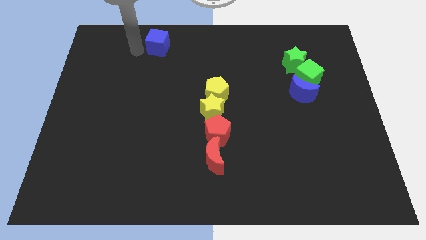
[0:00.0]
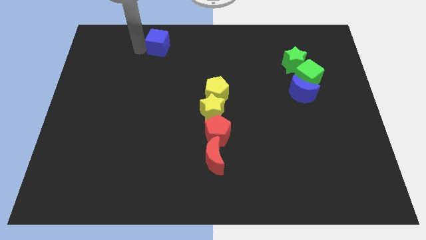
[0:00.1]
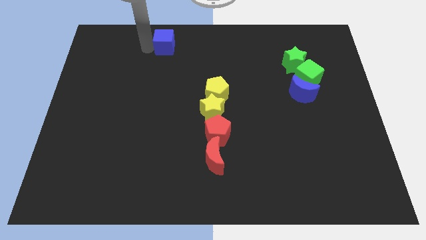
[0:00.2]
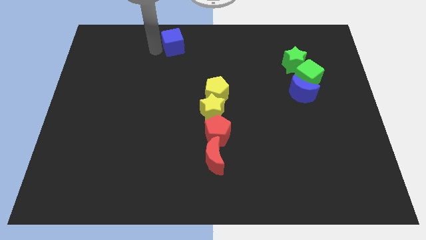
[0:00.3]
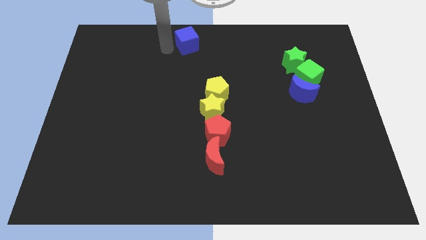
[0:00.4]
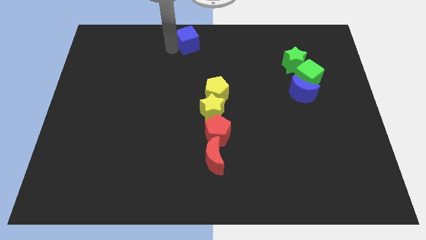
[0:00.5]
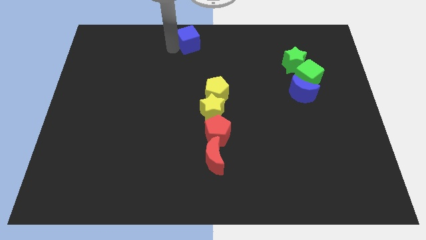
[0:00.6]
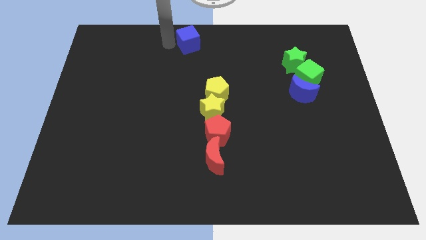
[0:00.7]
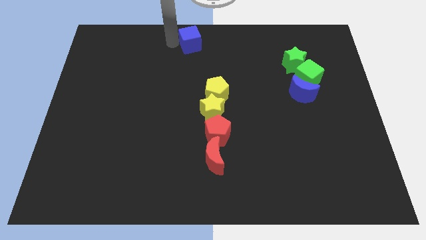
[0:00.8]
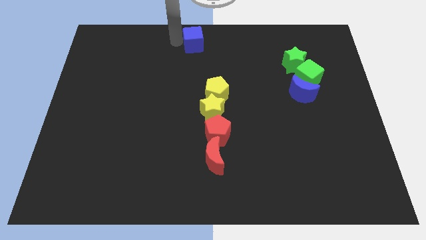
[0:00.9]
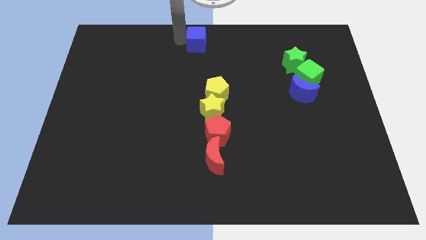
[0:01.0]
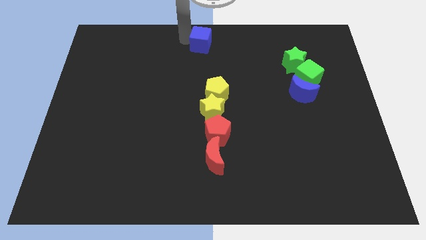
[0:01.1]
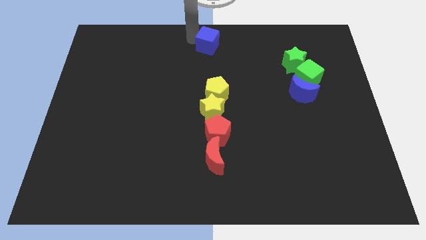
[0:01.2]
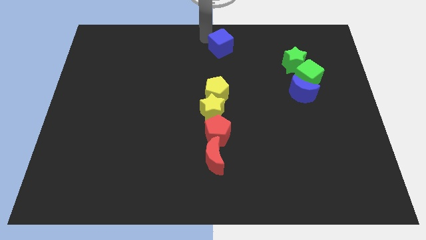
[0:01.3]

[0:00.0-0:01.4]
move the blue cube to the top center of the board

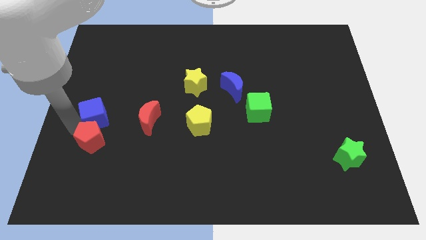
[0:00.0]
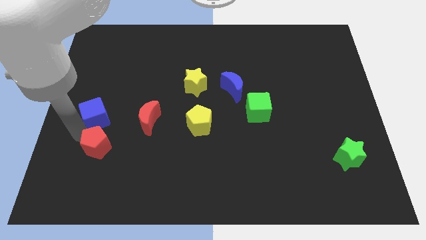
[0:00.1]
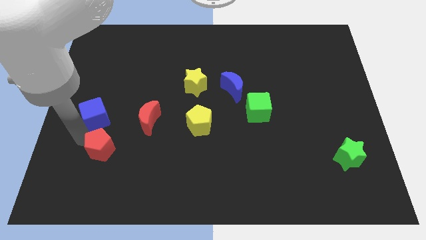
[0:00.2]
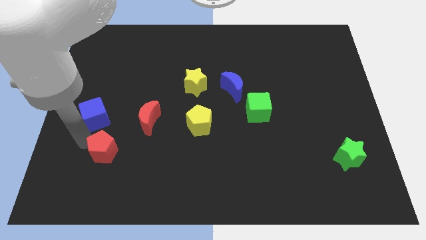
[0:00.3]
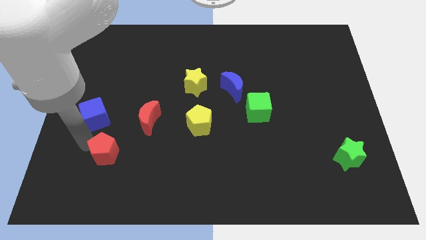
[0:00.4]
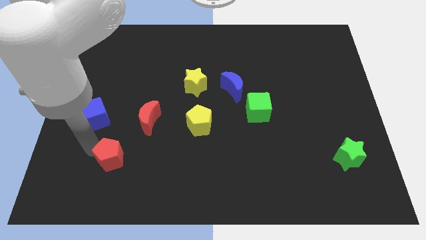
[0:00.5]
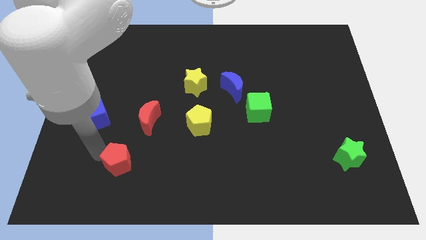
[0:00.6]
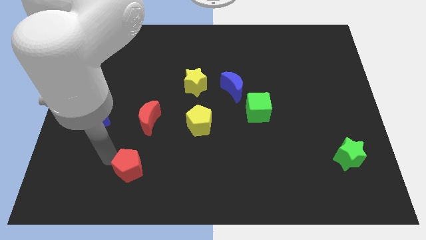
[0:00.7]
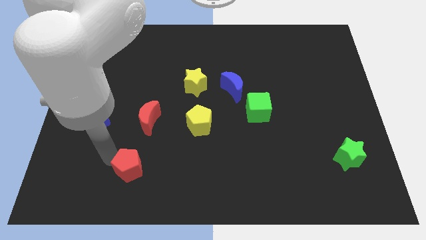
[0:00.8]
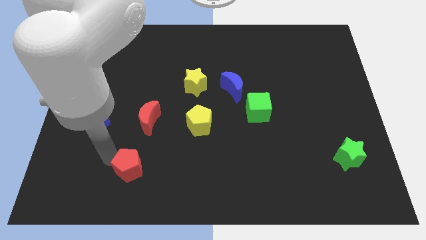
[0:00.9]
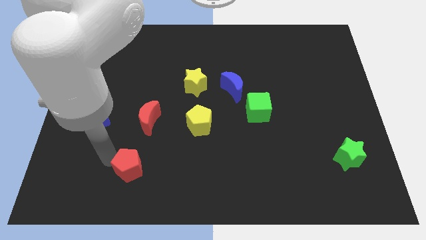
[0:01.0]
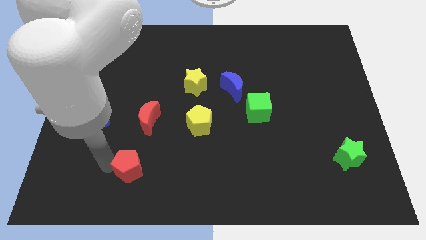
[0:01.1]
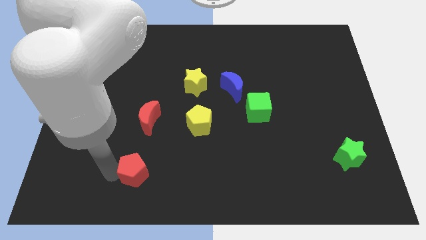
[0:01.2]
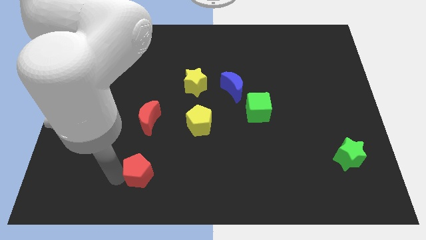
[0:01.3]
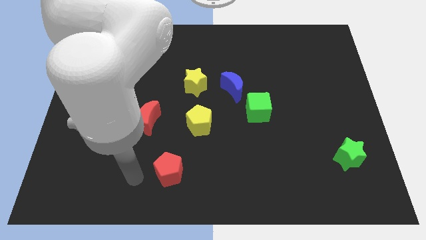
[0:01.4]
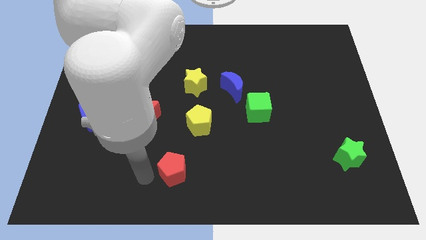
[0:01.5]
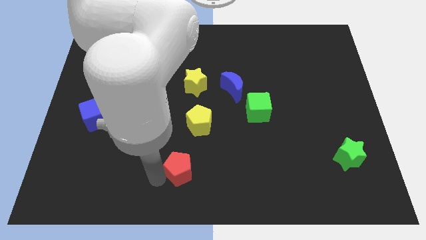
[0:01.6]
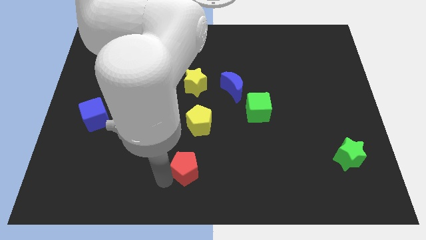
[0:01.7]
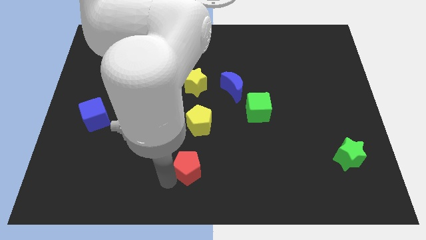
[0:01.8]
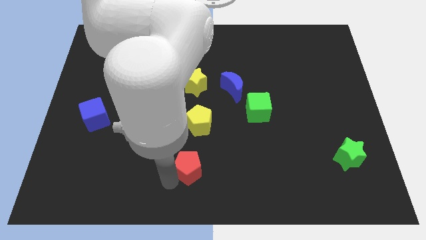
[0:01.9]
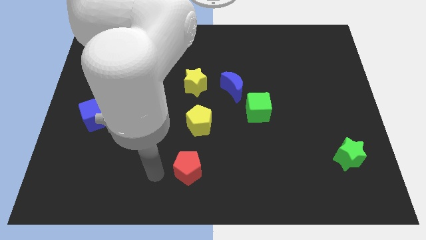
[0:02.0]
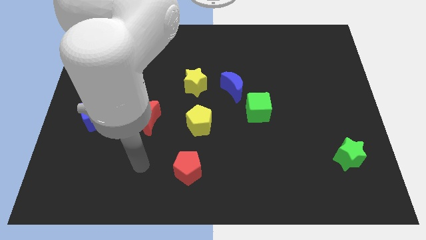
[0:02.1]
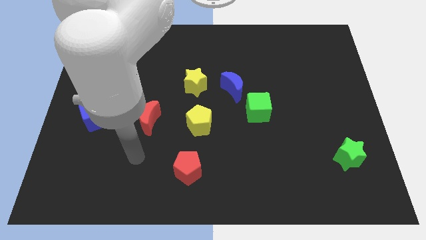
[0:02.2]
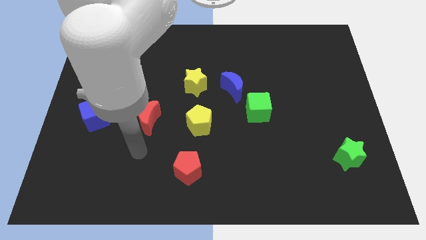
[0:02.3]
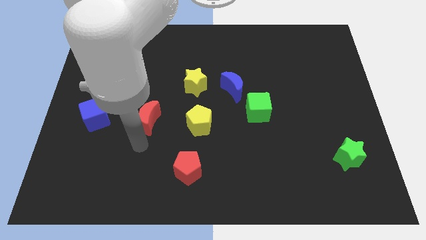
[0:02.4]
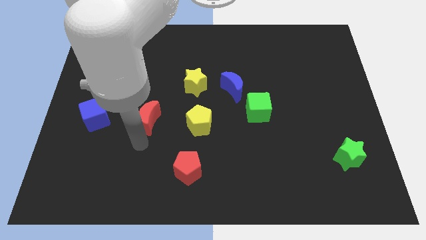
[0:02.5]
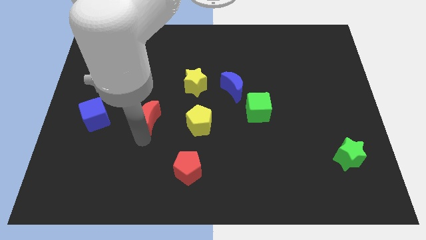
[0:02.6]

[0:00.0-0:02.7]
place the red pentagon below the yellow pentagon

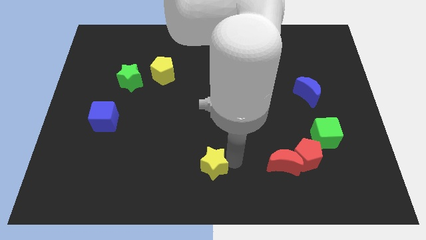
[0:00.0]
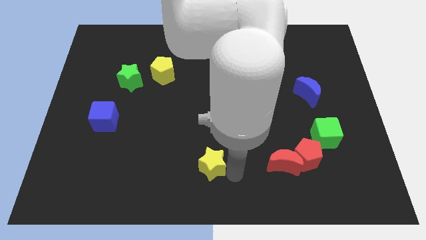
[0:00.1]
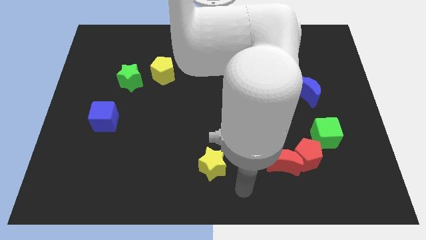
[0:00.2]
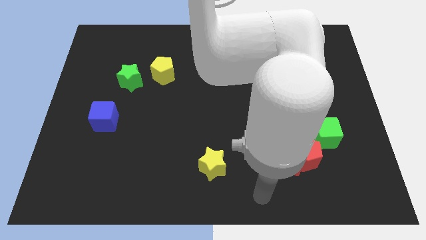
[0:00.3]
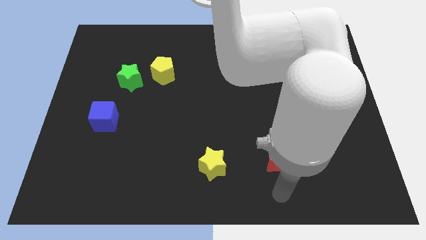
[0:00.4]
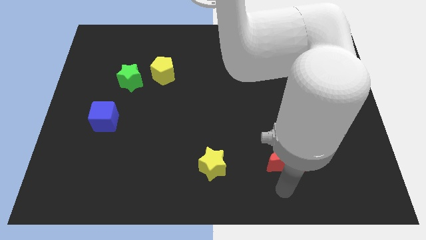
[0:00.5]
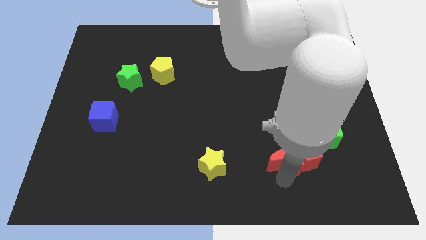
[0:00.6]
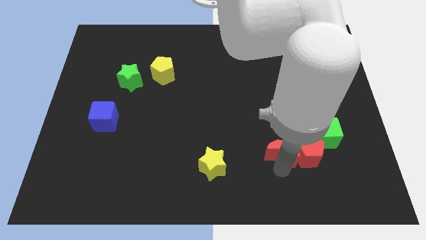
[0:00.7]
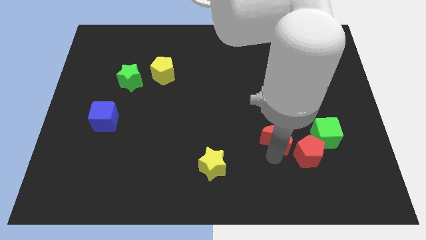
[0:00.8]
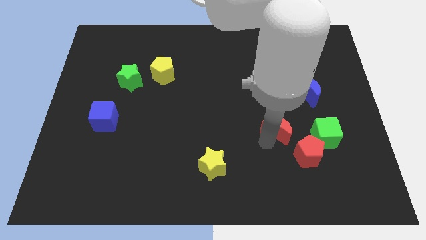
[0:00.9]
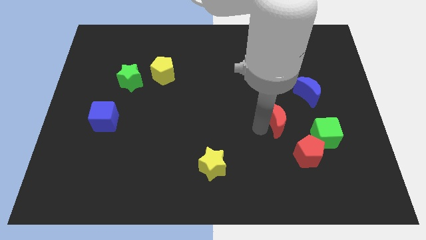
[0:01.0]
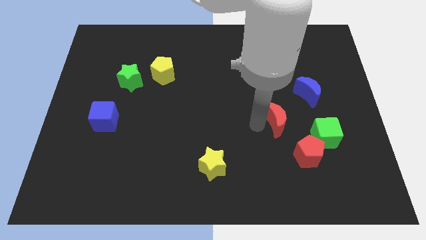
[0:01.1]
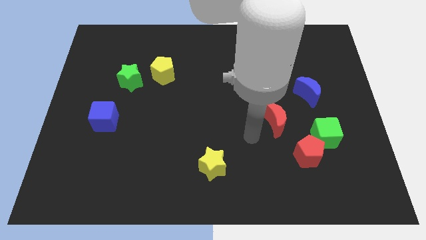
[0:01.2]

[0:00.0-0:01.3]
push the red moon slightly to the top of the board

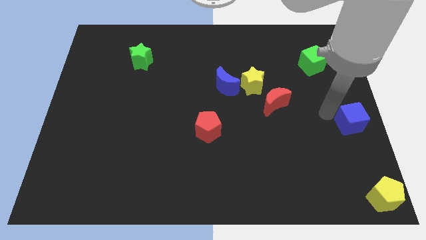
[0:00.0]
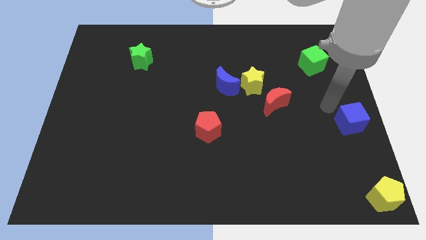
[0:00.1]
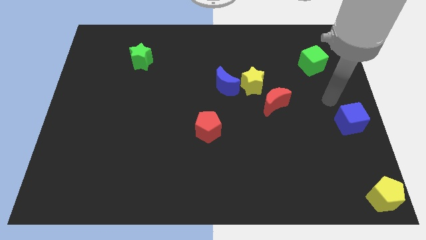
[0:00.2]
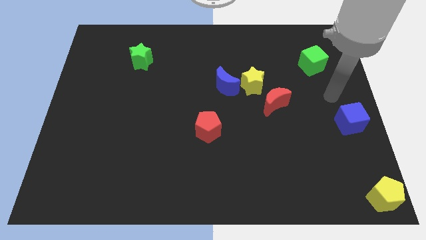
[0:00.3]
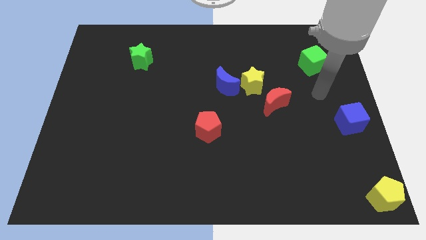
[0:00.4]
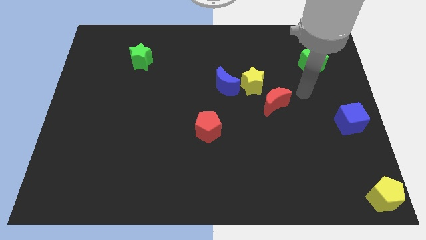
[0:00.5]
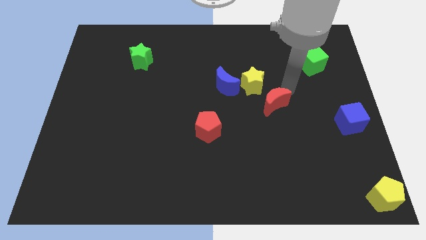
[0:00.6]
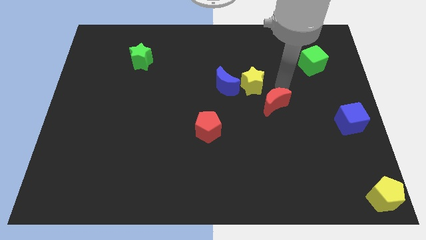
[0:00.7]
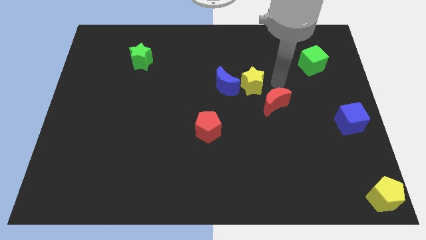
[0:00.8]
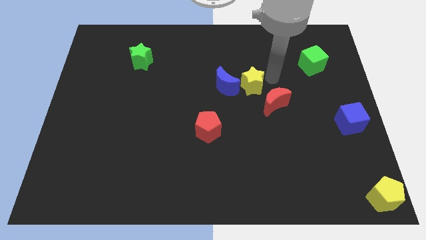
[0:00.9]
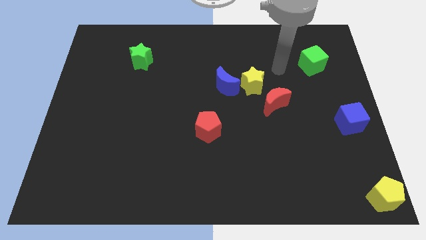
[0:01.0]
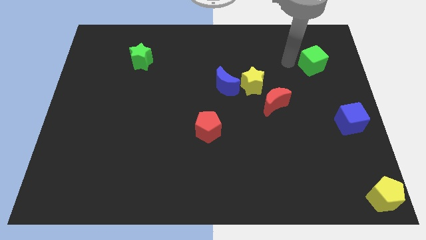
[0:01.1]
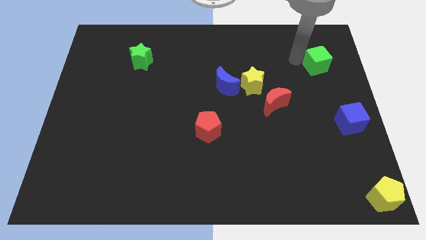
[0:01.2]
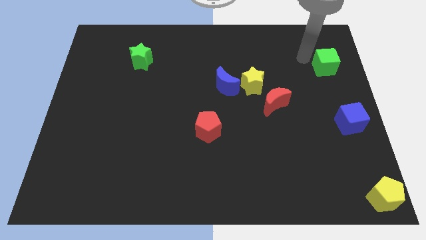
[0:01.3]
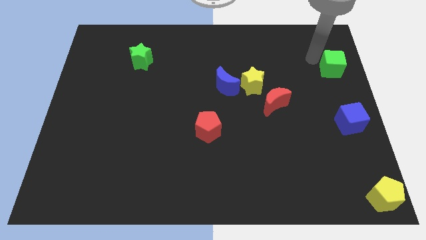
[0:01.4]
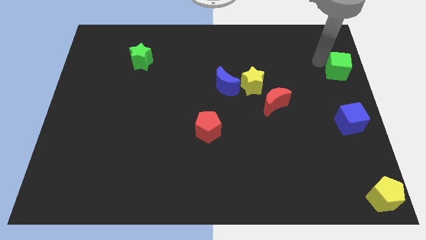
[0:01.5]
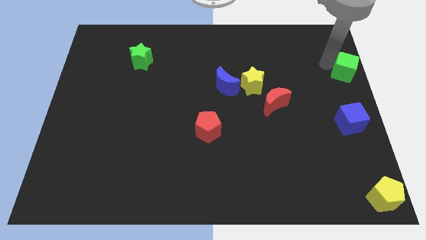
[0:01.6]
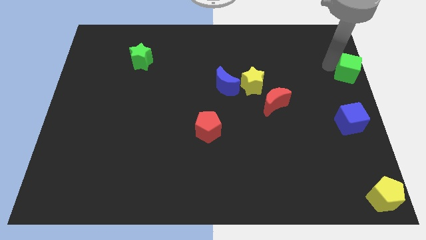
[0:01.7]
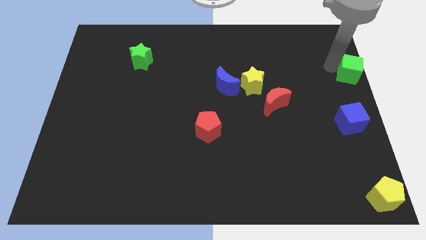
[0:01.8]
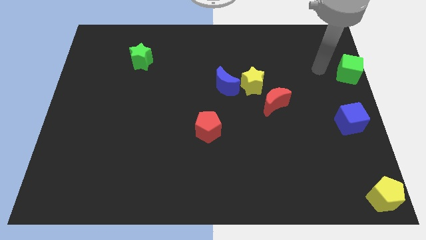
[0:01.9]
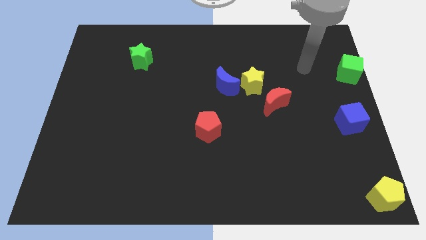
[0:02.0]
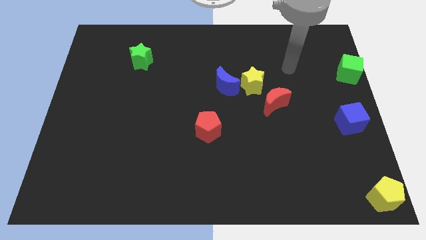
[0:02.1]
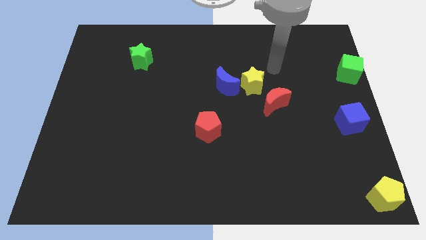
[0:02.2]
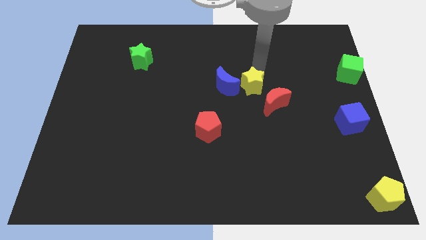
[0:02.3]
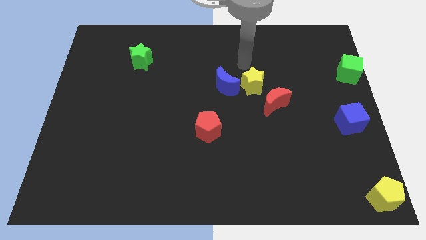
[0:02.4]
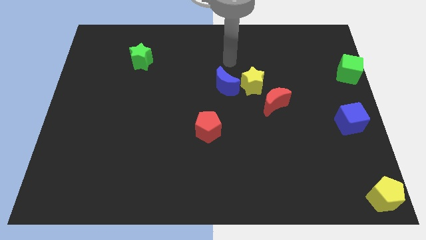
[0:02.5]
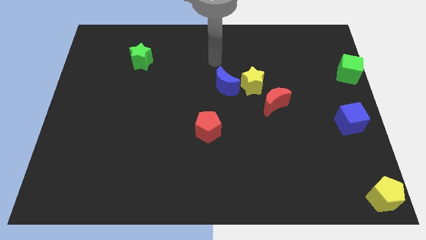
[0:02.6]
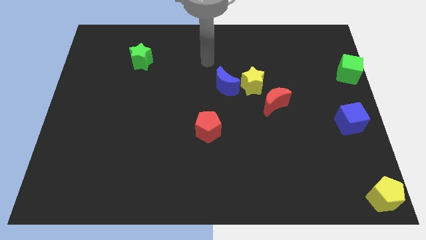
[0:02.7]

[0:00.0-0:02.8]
push the green star to the top of the blue cube

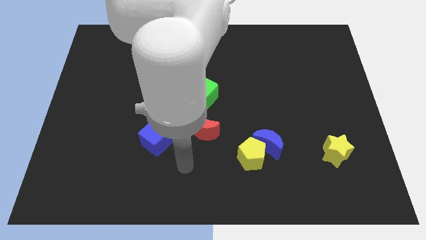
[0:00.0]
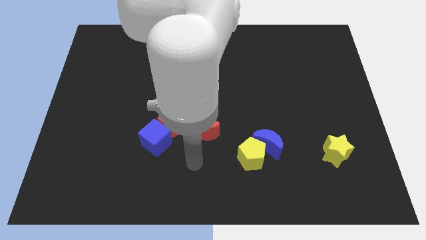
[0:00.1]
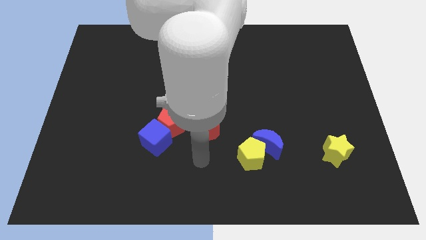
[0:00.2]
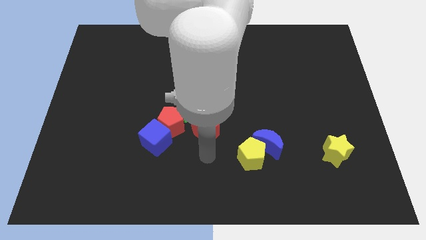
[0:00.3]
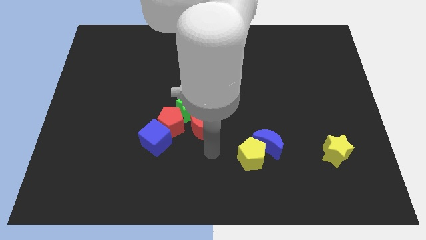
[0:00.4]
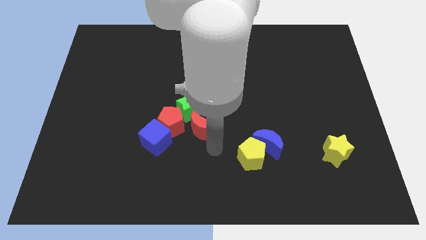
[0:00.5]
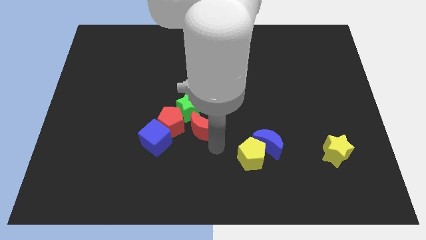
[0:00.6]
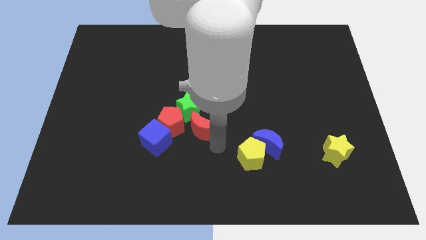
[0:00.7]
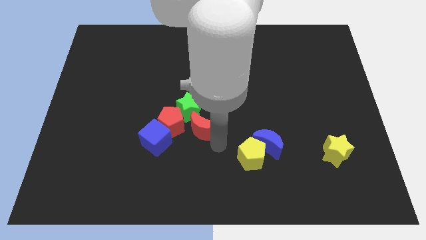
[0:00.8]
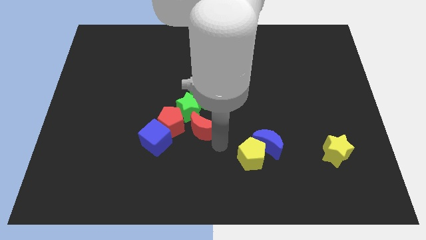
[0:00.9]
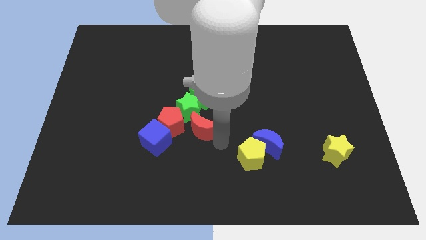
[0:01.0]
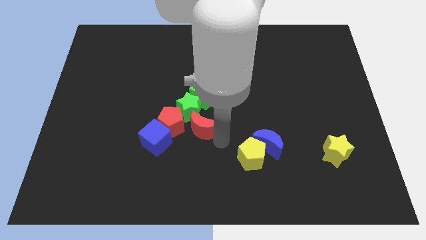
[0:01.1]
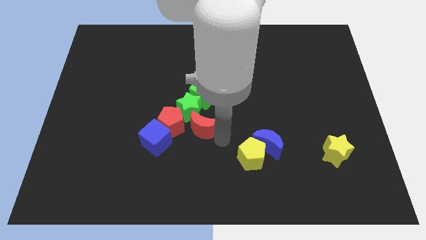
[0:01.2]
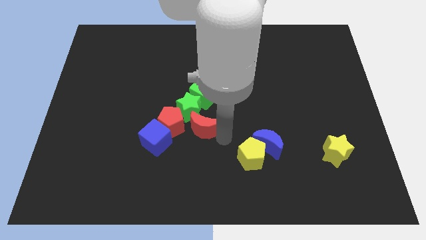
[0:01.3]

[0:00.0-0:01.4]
place your arm bottom to the red moon
